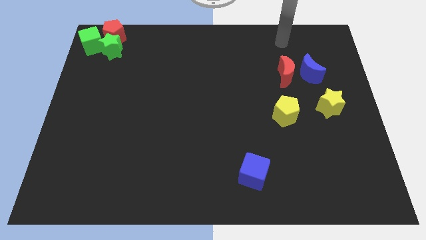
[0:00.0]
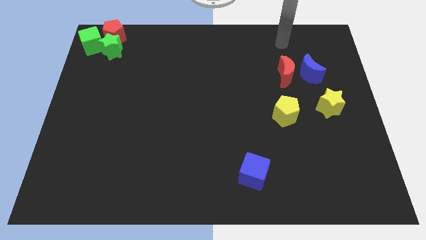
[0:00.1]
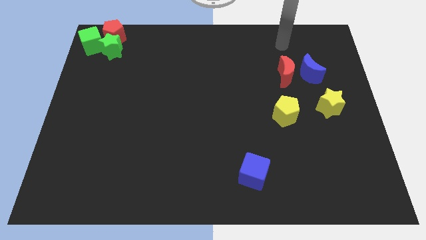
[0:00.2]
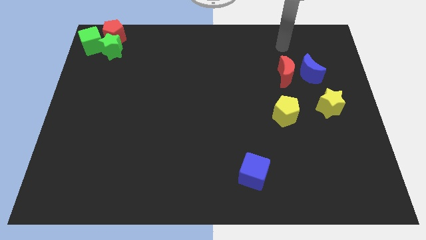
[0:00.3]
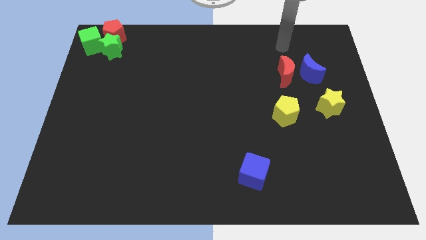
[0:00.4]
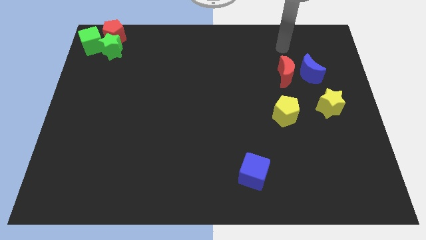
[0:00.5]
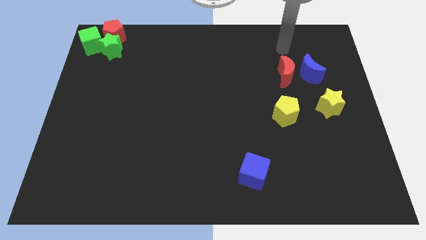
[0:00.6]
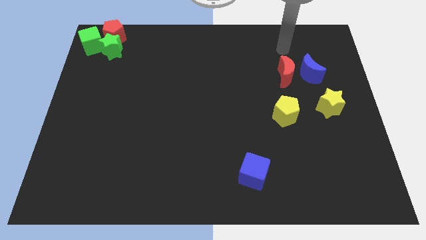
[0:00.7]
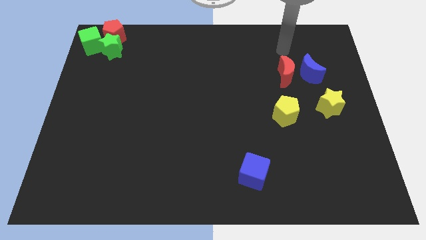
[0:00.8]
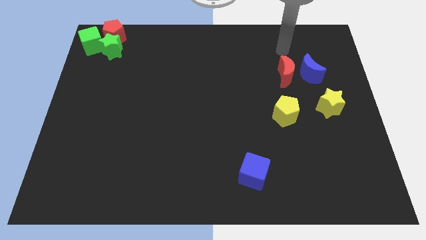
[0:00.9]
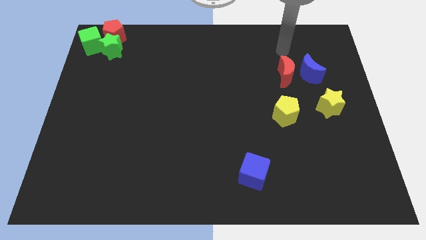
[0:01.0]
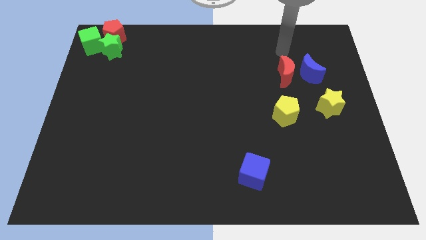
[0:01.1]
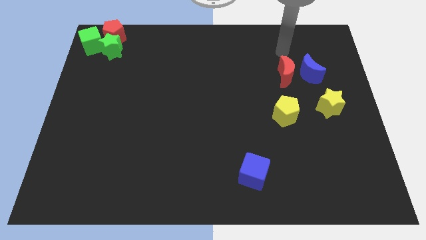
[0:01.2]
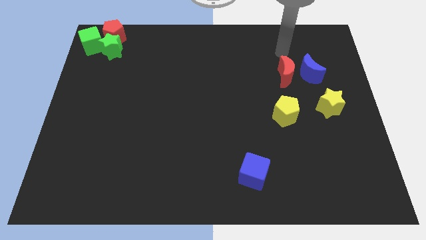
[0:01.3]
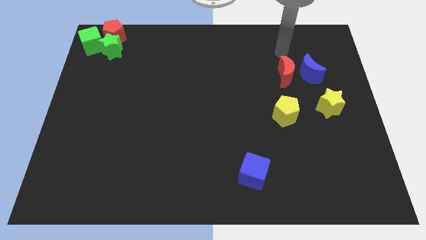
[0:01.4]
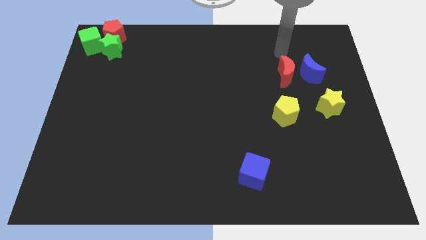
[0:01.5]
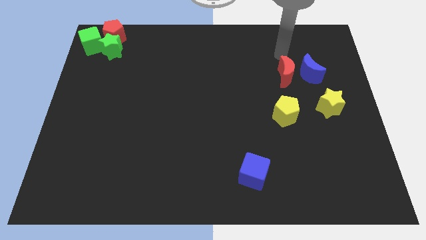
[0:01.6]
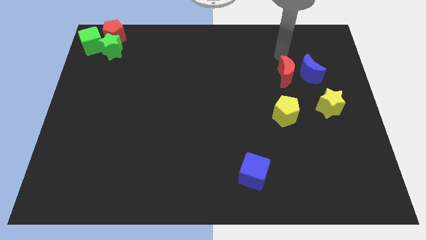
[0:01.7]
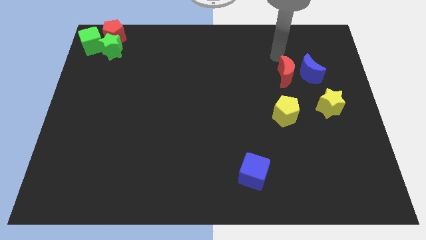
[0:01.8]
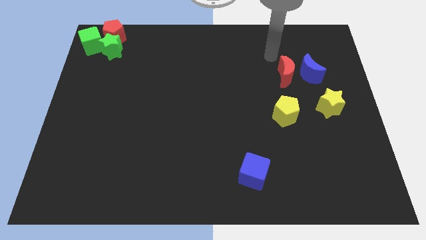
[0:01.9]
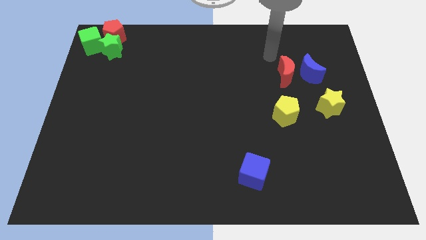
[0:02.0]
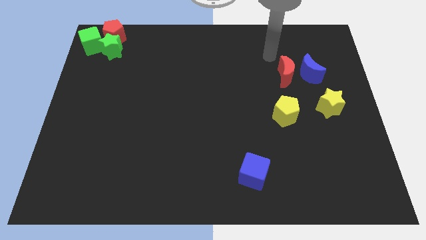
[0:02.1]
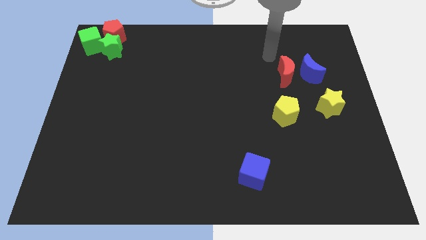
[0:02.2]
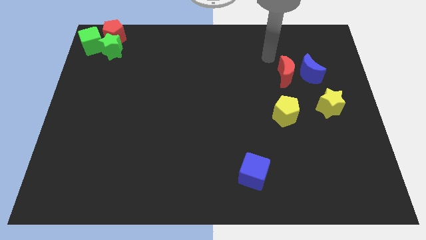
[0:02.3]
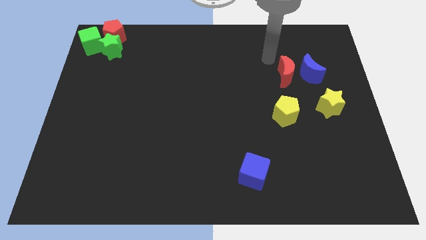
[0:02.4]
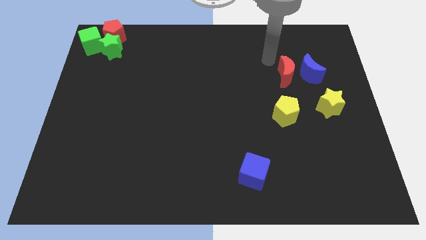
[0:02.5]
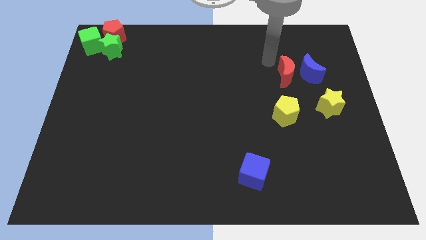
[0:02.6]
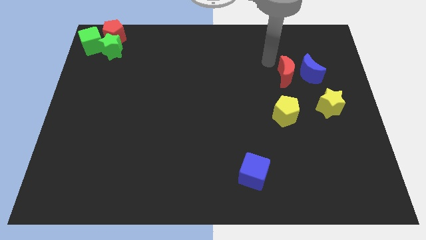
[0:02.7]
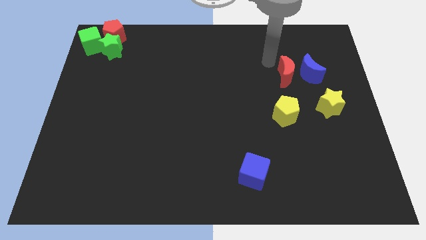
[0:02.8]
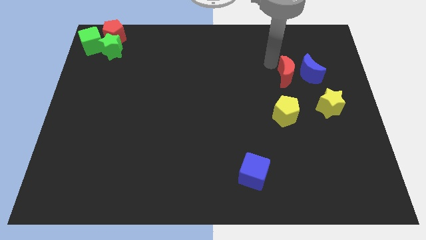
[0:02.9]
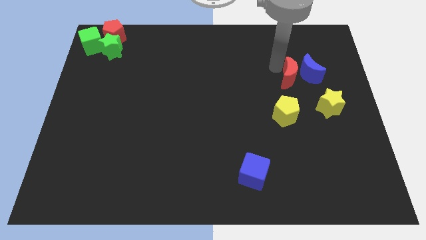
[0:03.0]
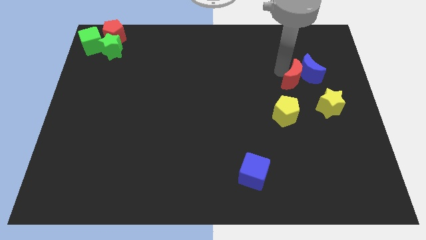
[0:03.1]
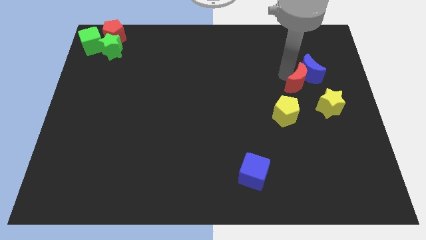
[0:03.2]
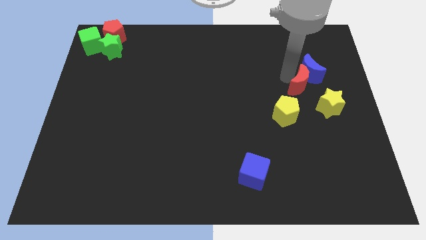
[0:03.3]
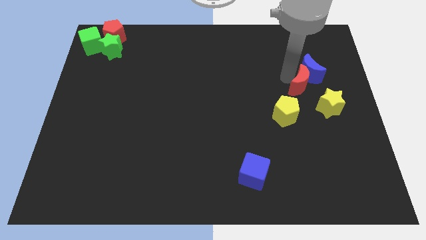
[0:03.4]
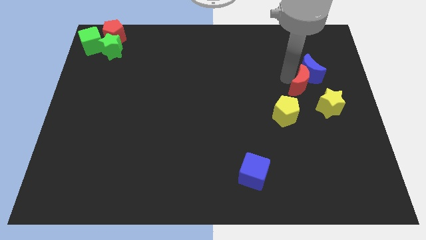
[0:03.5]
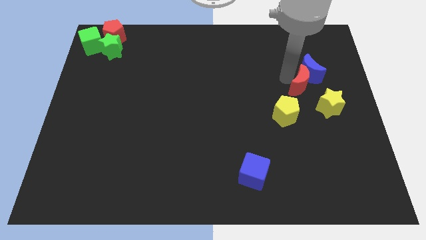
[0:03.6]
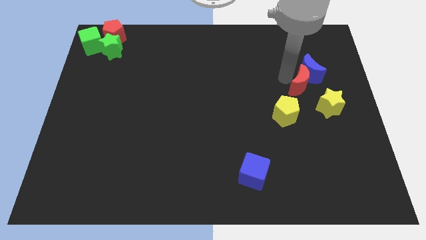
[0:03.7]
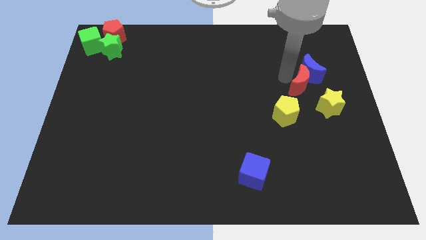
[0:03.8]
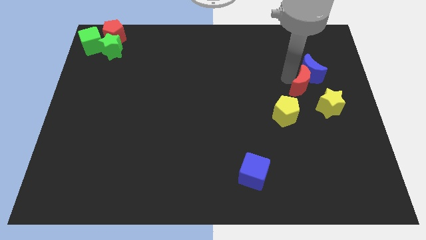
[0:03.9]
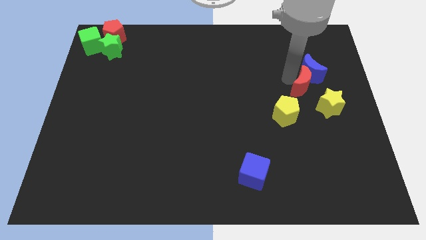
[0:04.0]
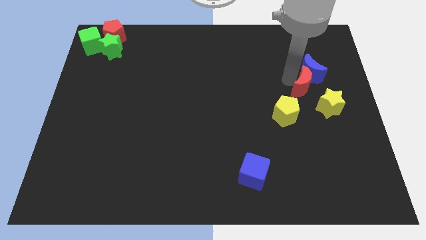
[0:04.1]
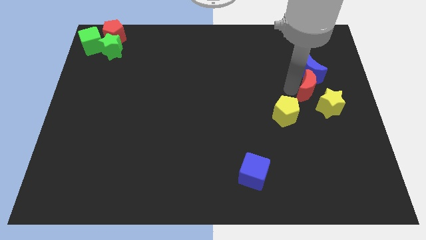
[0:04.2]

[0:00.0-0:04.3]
move the red crescent bottom left of the blue moon

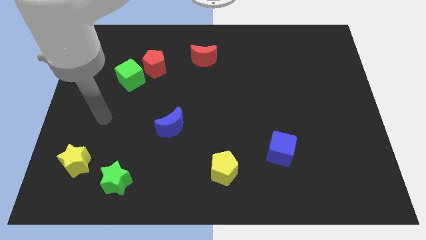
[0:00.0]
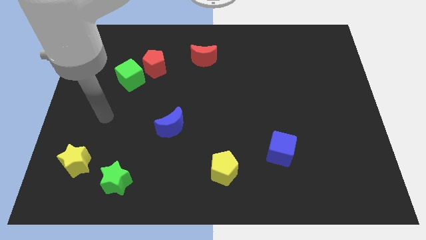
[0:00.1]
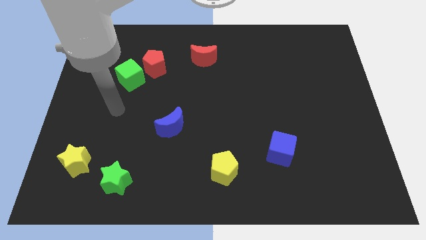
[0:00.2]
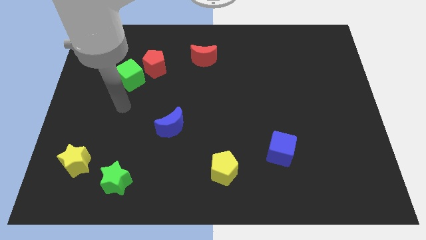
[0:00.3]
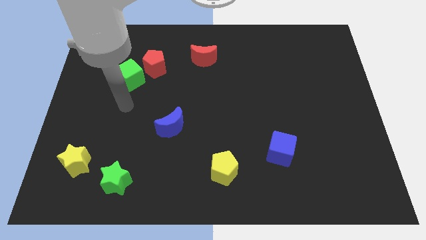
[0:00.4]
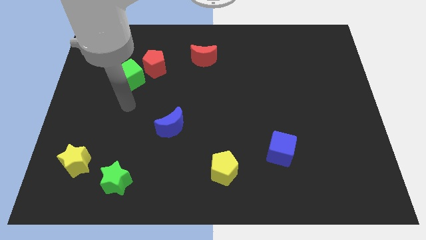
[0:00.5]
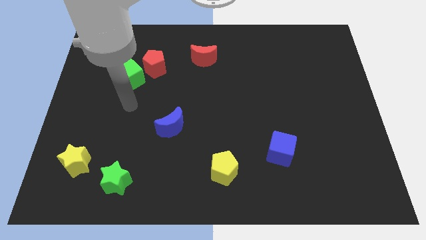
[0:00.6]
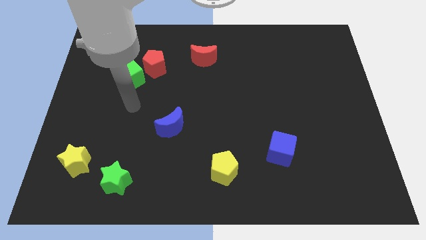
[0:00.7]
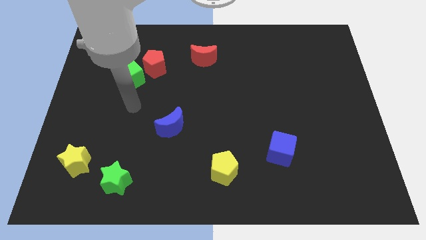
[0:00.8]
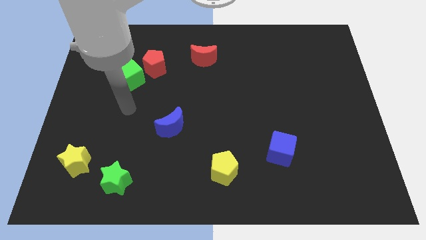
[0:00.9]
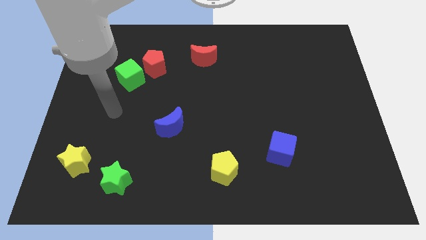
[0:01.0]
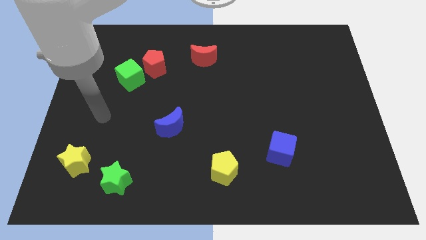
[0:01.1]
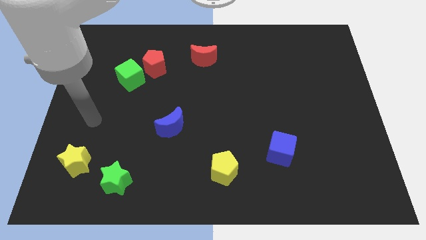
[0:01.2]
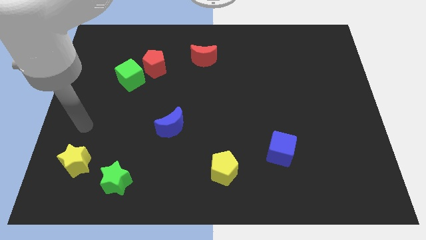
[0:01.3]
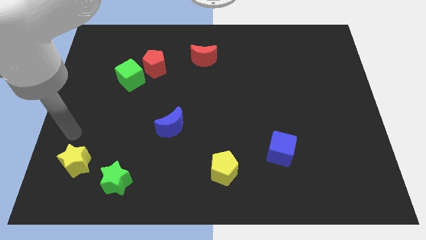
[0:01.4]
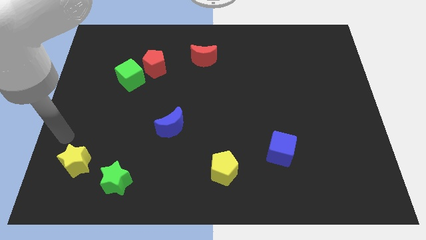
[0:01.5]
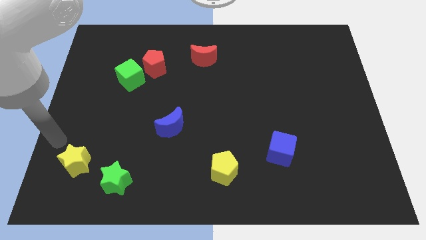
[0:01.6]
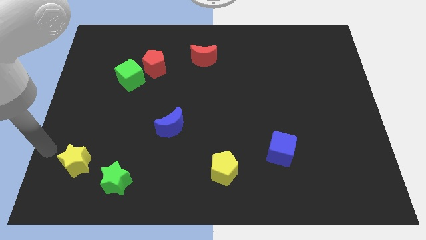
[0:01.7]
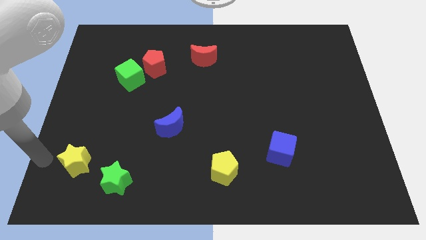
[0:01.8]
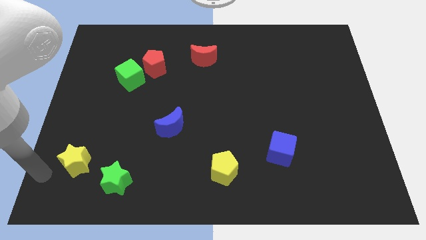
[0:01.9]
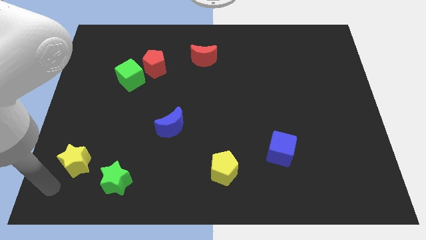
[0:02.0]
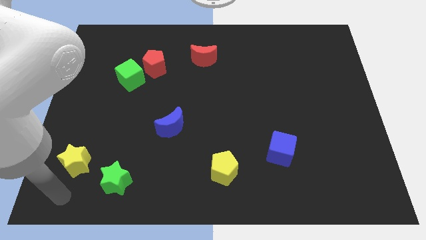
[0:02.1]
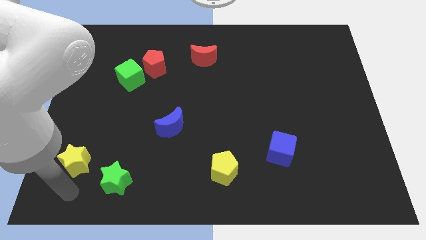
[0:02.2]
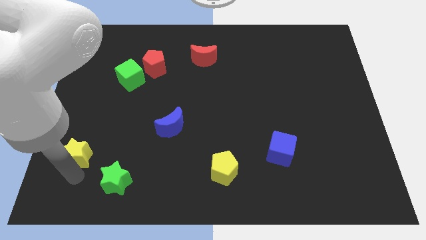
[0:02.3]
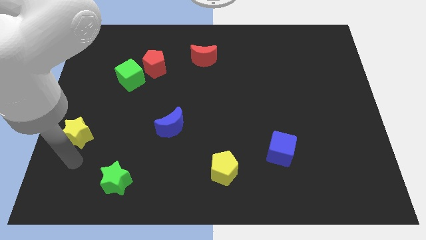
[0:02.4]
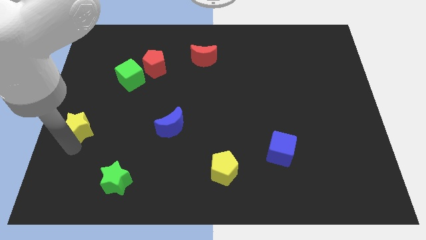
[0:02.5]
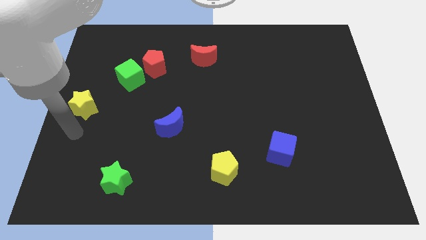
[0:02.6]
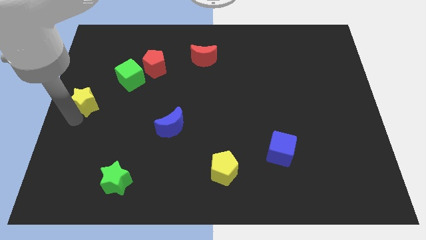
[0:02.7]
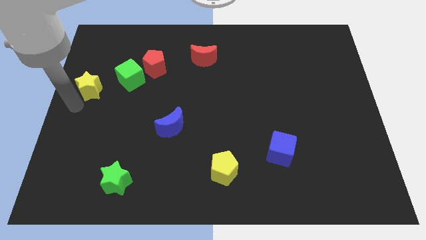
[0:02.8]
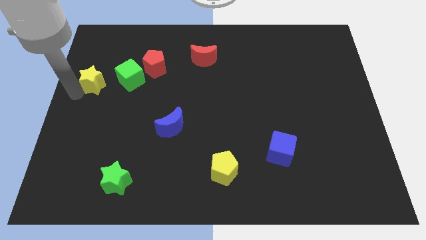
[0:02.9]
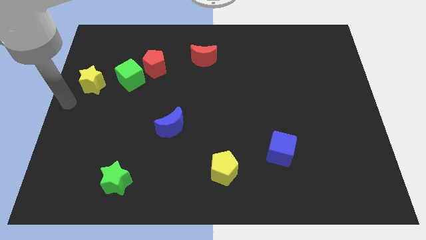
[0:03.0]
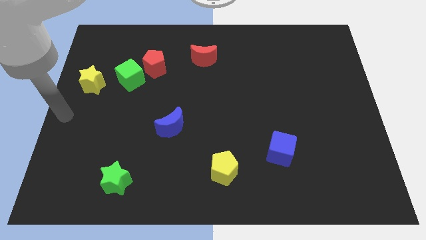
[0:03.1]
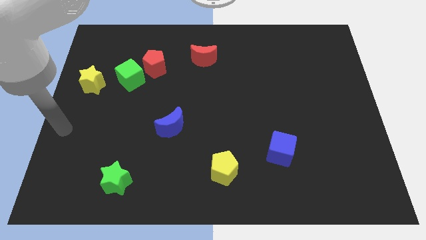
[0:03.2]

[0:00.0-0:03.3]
move the yellow pentagon left to the green cube

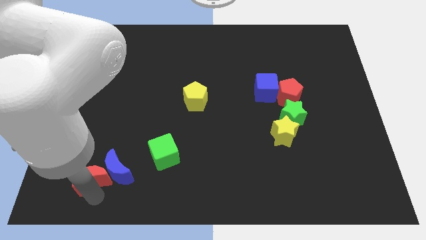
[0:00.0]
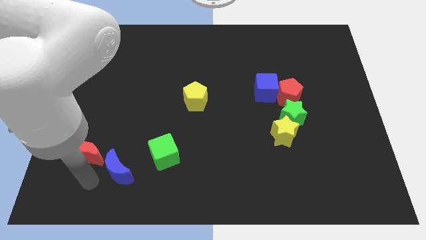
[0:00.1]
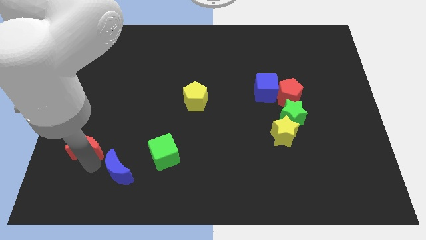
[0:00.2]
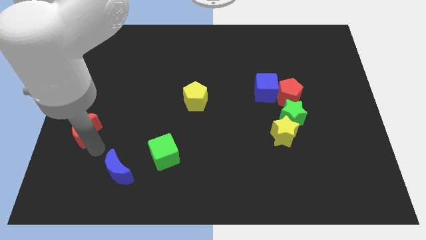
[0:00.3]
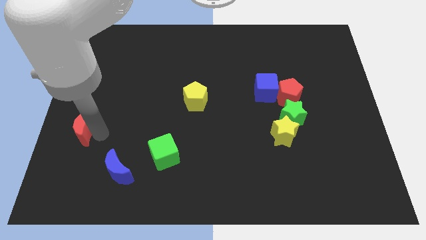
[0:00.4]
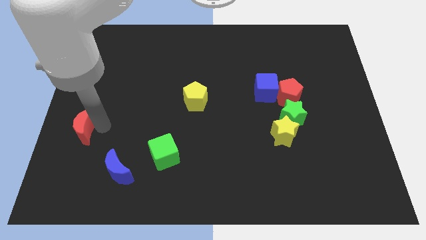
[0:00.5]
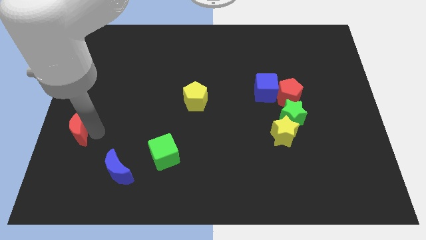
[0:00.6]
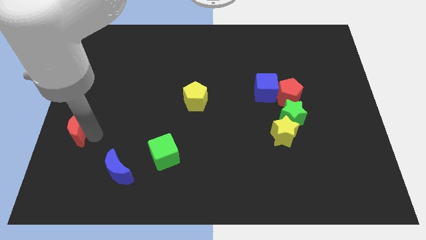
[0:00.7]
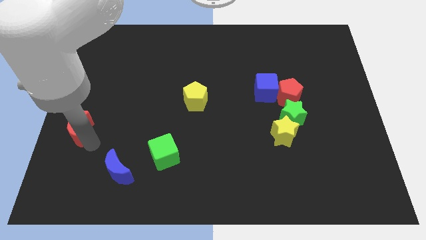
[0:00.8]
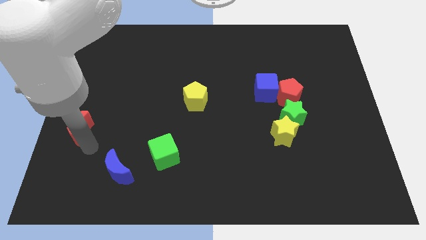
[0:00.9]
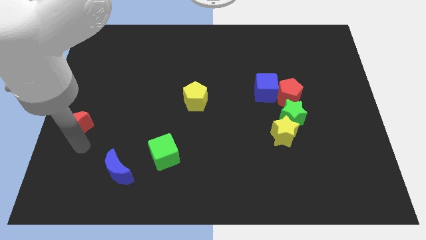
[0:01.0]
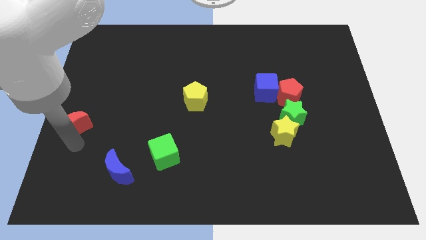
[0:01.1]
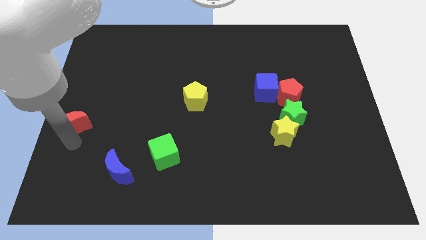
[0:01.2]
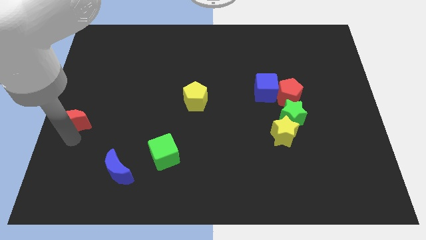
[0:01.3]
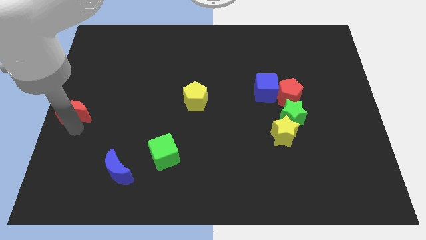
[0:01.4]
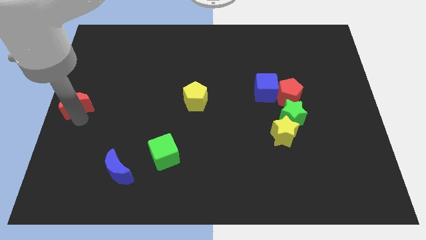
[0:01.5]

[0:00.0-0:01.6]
place the red moon at the top left of the blue moon
